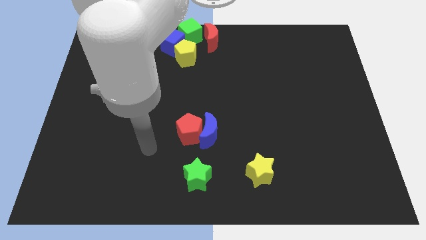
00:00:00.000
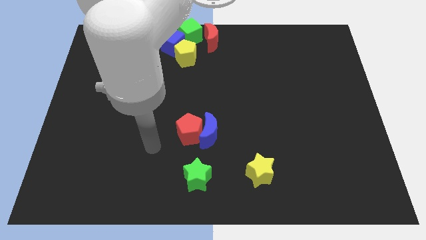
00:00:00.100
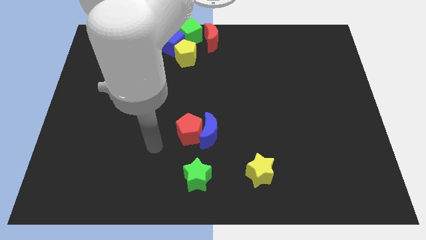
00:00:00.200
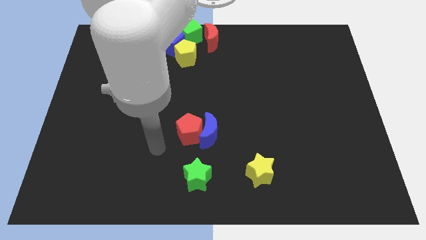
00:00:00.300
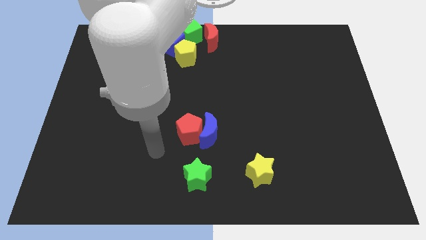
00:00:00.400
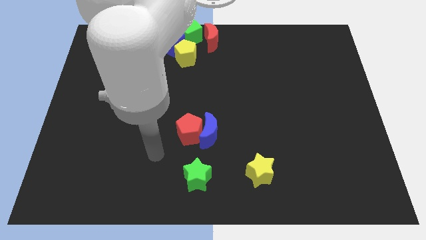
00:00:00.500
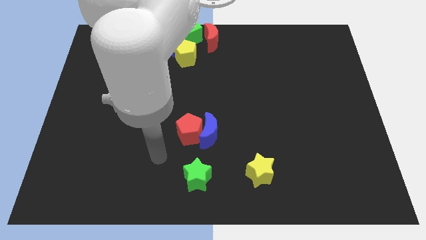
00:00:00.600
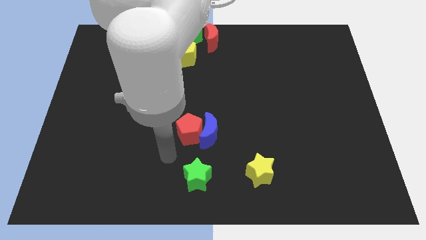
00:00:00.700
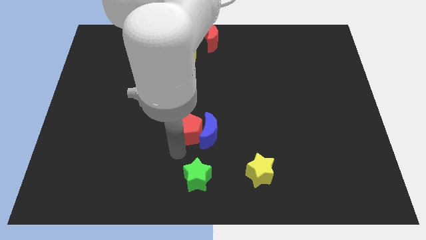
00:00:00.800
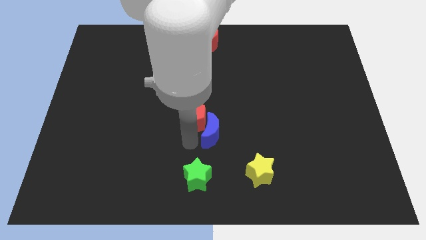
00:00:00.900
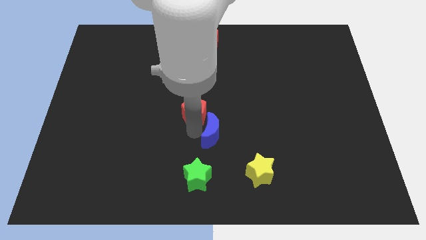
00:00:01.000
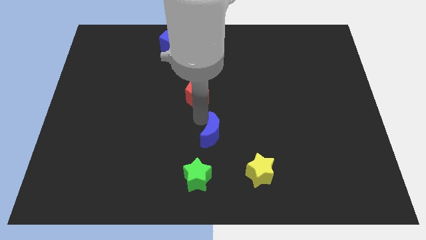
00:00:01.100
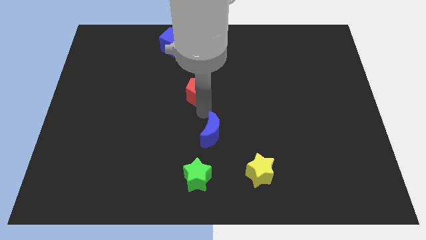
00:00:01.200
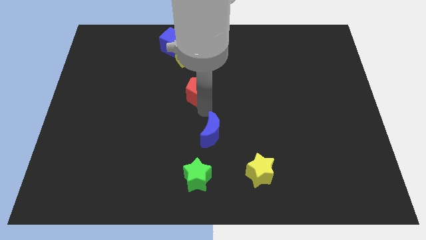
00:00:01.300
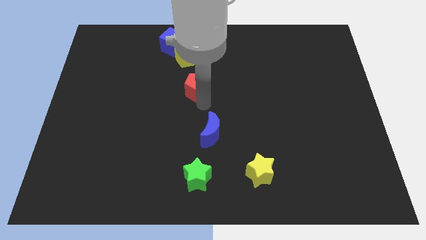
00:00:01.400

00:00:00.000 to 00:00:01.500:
separate the red pentagon from the left side of the blue moon

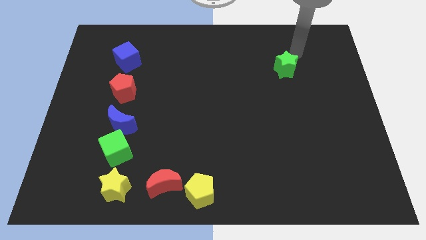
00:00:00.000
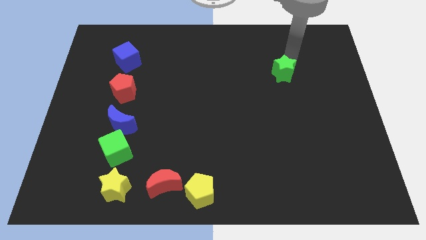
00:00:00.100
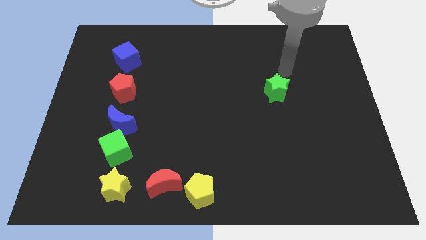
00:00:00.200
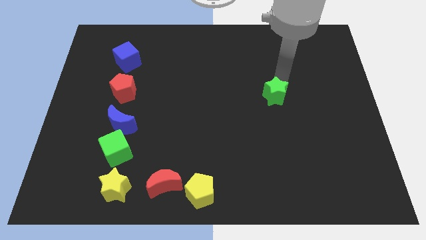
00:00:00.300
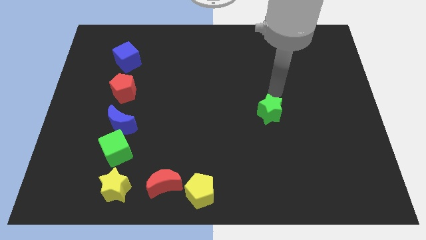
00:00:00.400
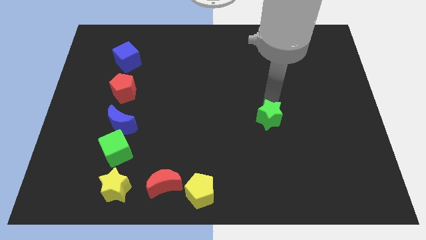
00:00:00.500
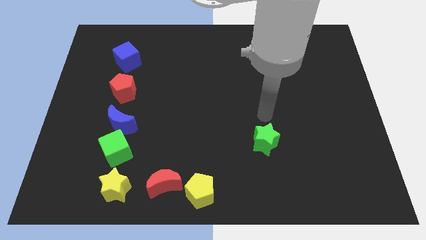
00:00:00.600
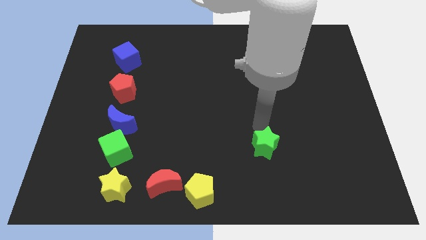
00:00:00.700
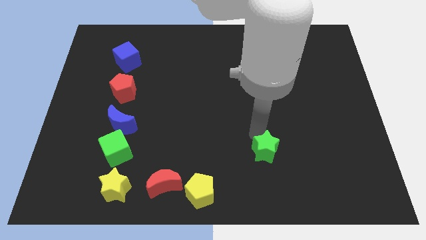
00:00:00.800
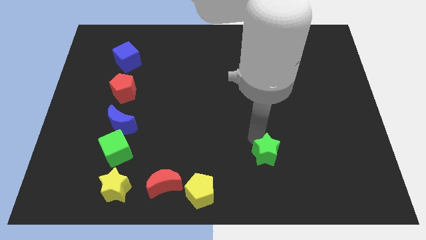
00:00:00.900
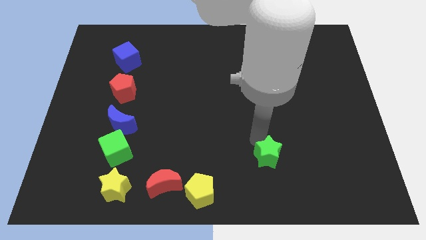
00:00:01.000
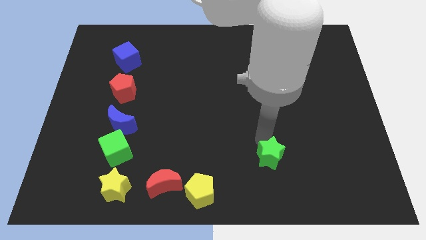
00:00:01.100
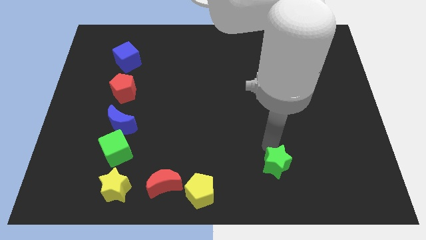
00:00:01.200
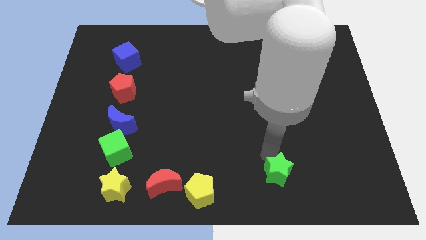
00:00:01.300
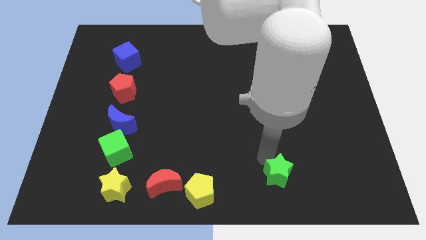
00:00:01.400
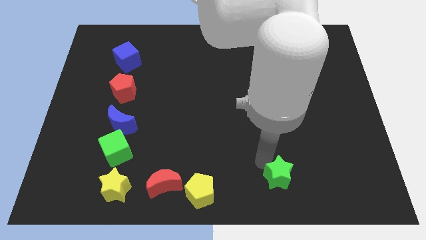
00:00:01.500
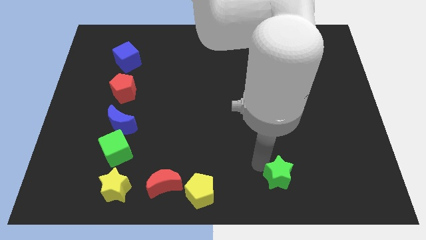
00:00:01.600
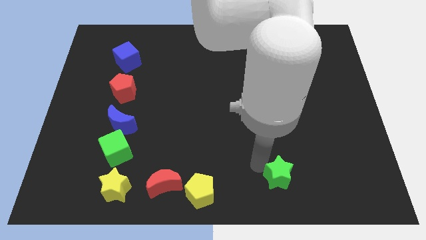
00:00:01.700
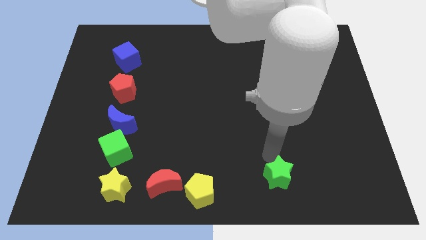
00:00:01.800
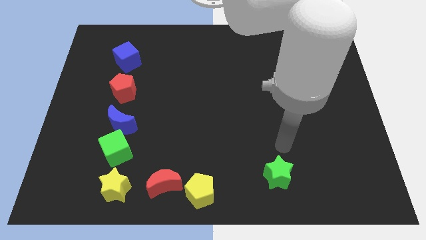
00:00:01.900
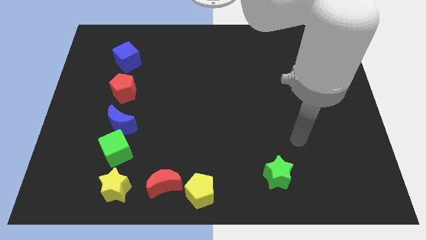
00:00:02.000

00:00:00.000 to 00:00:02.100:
move the green star towards the bottom center

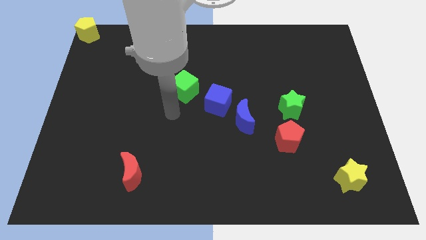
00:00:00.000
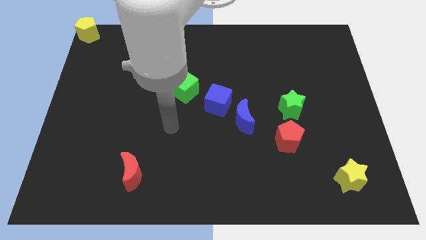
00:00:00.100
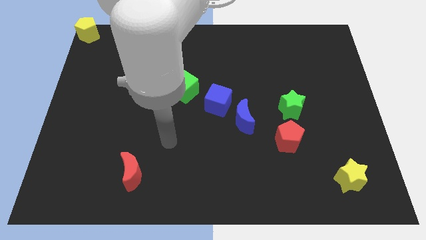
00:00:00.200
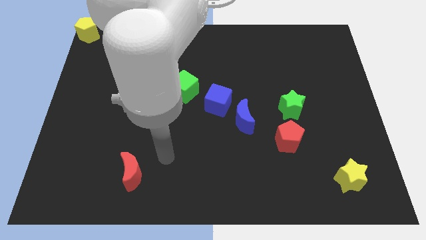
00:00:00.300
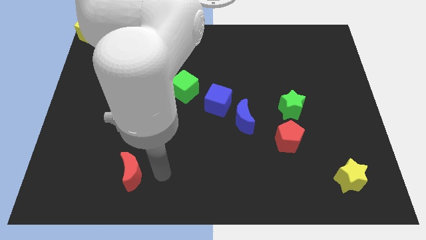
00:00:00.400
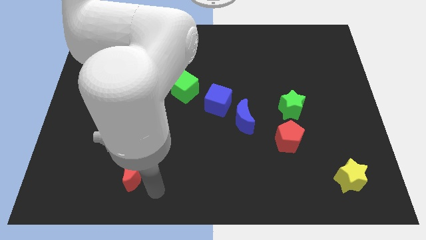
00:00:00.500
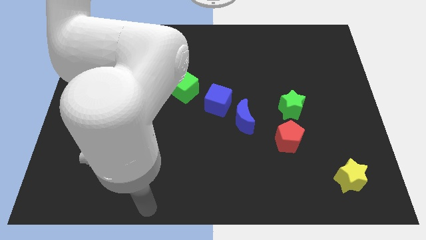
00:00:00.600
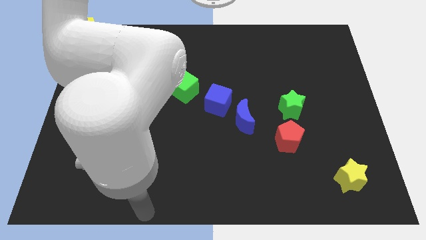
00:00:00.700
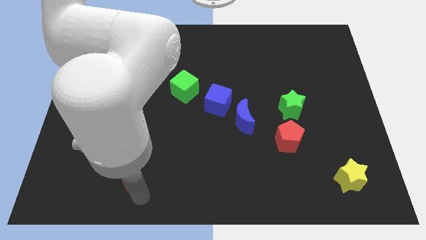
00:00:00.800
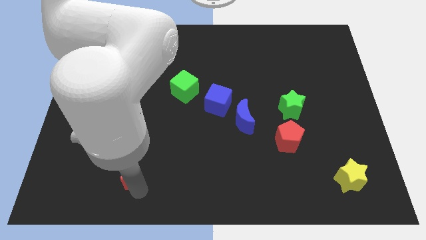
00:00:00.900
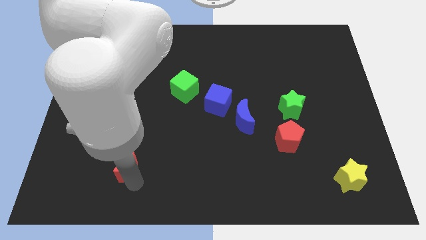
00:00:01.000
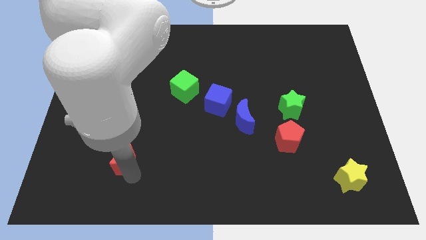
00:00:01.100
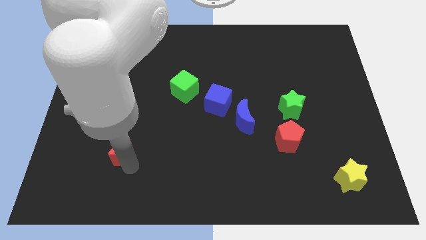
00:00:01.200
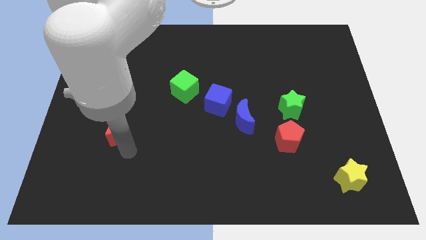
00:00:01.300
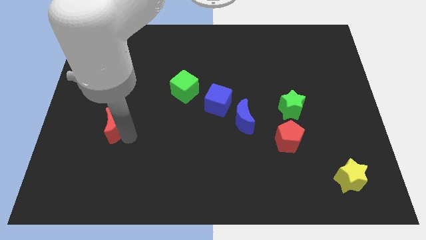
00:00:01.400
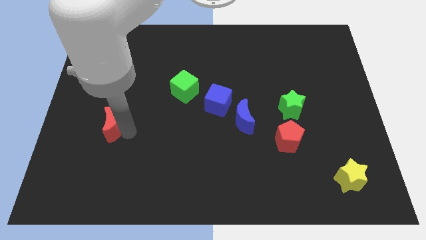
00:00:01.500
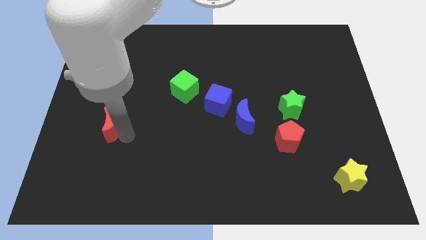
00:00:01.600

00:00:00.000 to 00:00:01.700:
slide the red crescent towards the center left

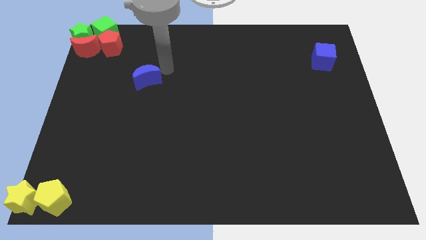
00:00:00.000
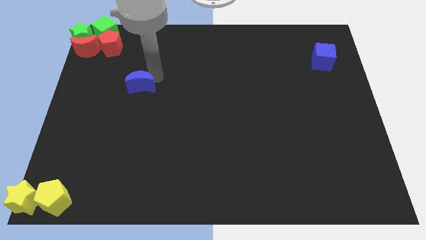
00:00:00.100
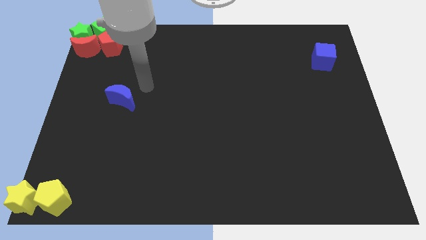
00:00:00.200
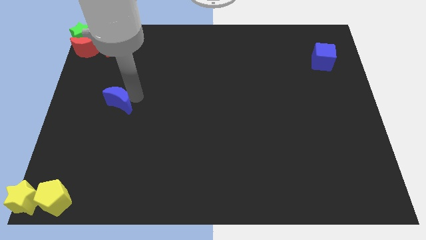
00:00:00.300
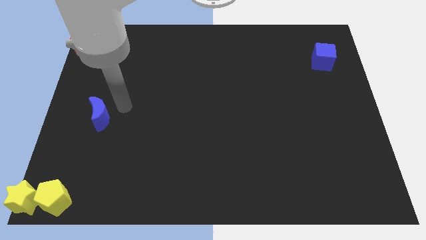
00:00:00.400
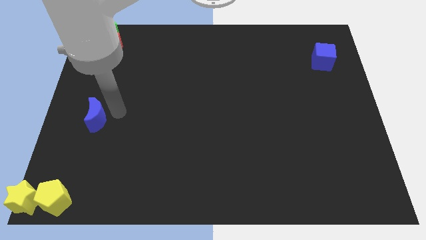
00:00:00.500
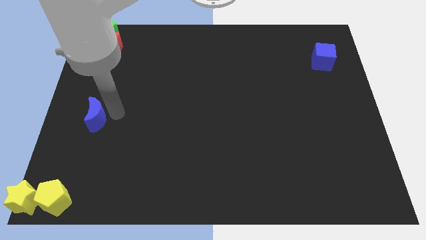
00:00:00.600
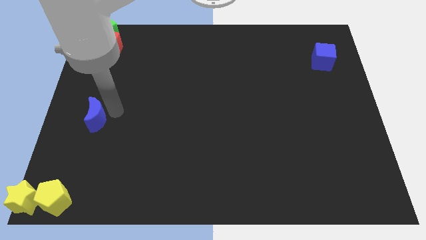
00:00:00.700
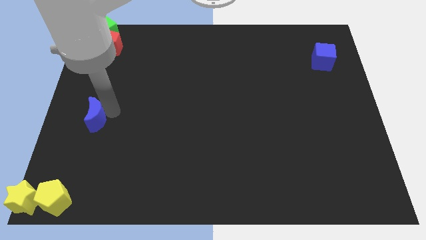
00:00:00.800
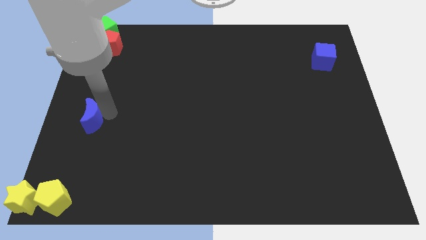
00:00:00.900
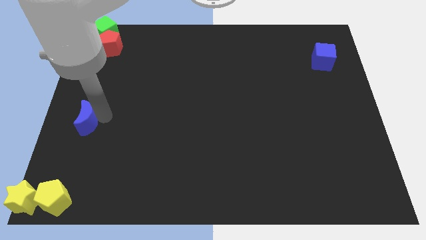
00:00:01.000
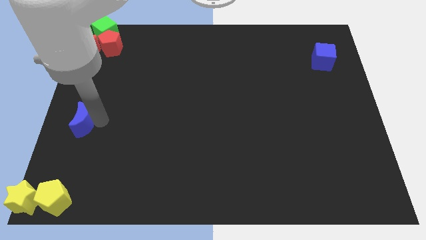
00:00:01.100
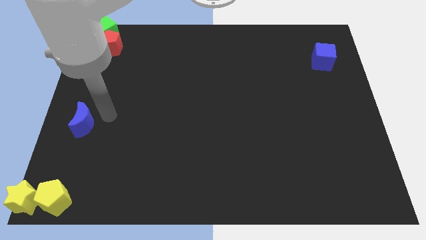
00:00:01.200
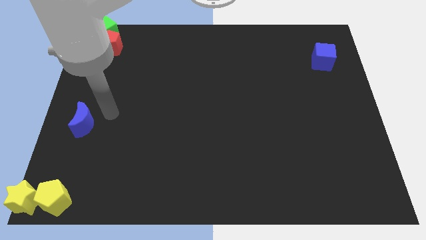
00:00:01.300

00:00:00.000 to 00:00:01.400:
place the blue moon above the yellow pentagon

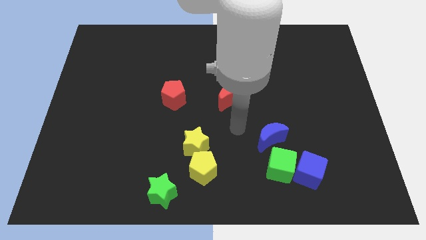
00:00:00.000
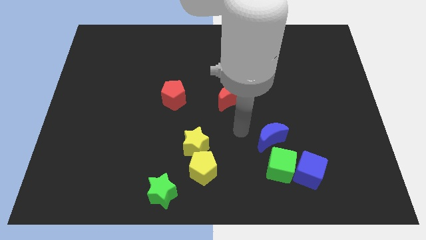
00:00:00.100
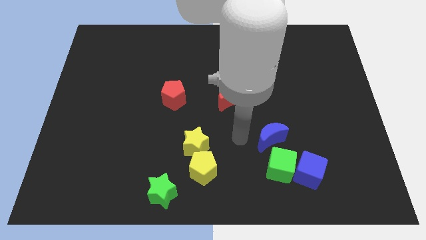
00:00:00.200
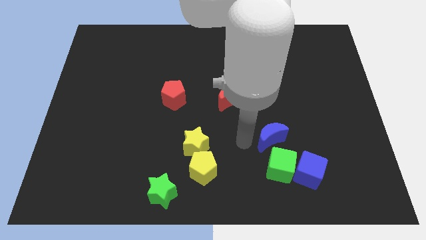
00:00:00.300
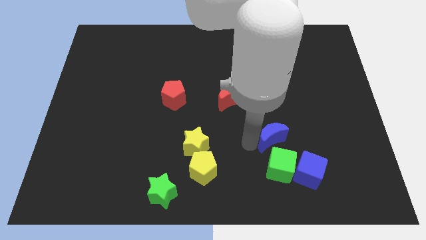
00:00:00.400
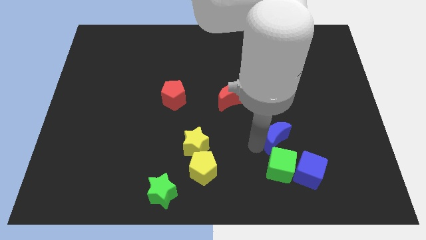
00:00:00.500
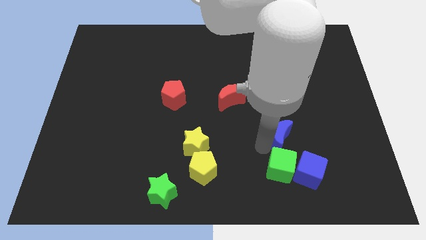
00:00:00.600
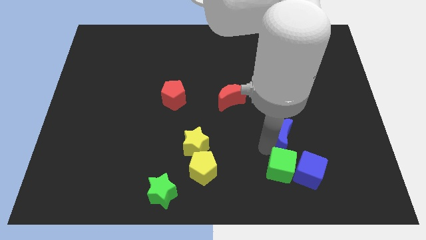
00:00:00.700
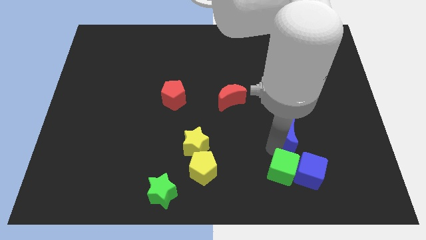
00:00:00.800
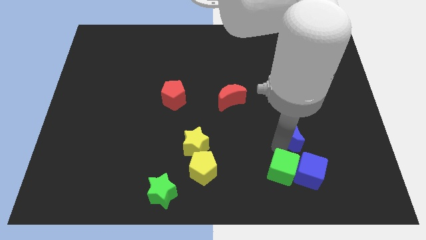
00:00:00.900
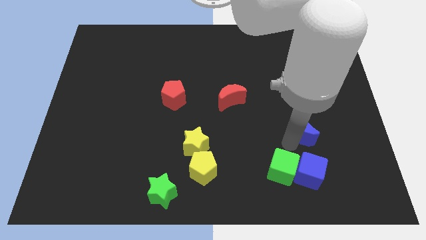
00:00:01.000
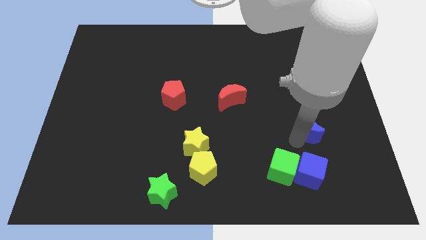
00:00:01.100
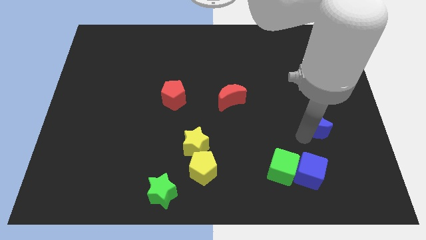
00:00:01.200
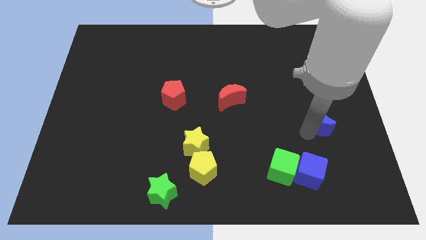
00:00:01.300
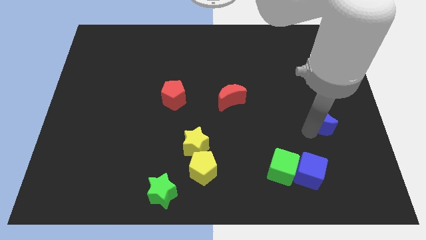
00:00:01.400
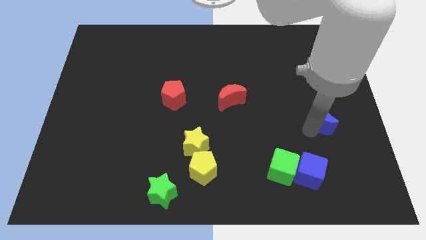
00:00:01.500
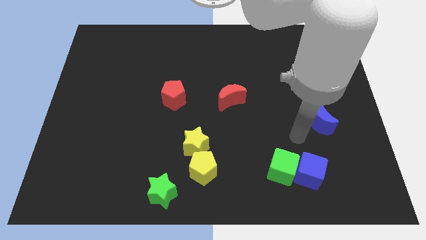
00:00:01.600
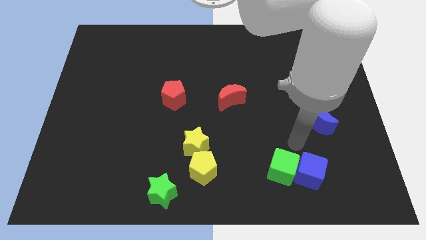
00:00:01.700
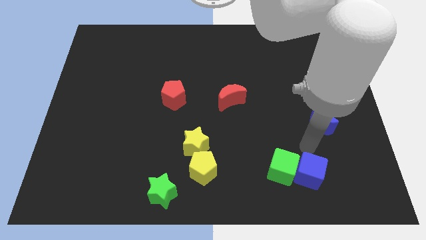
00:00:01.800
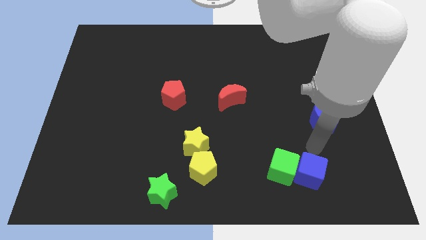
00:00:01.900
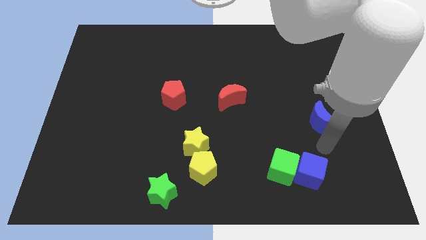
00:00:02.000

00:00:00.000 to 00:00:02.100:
separate blue moon from green cube
